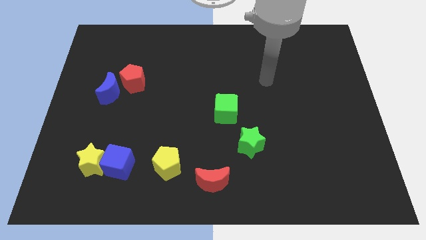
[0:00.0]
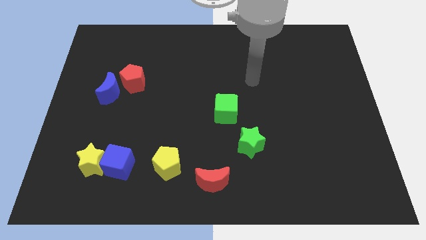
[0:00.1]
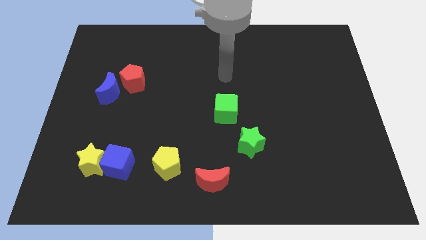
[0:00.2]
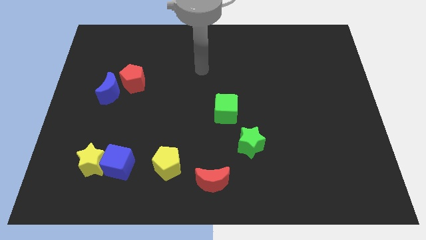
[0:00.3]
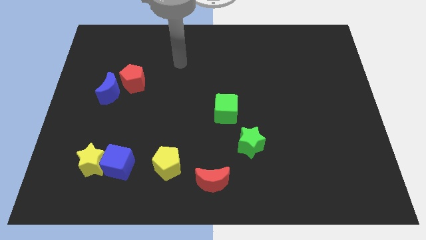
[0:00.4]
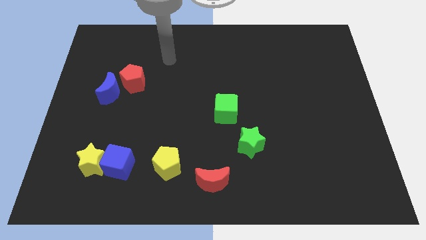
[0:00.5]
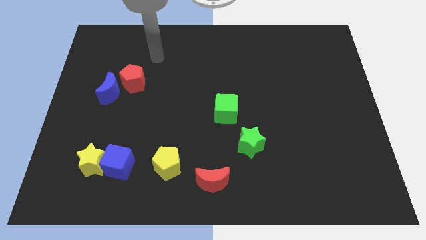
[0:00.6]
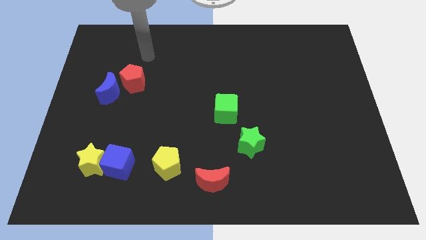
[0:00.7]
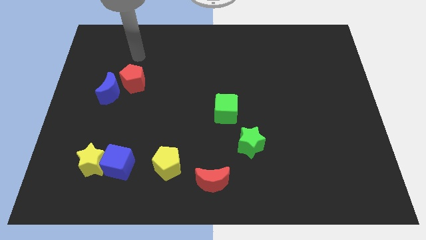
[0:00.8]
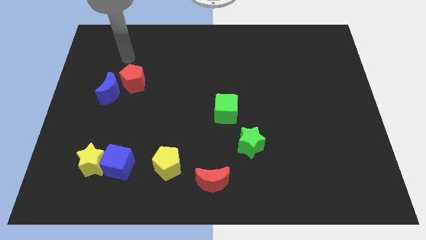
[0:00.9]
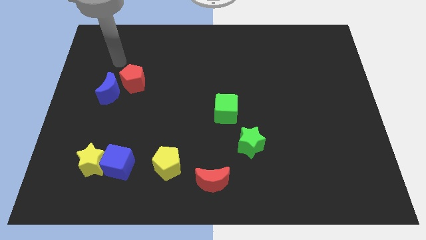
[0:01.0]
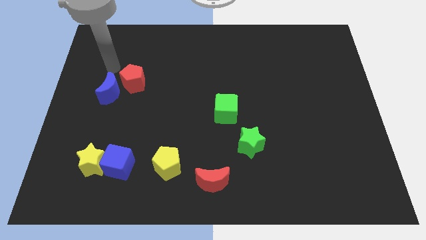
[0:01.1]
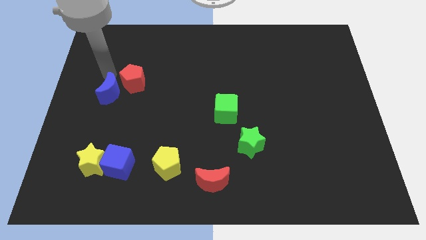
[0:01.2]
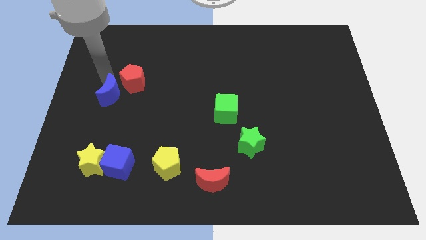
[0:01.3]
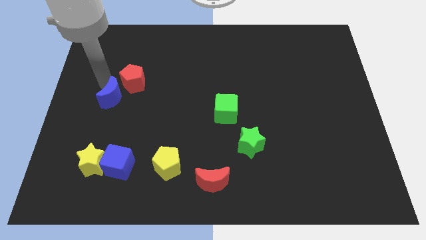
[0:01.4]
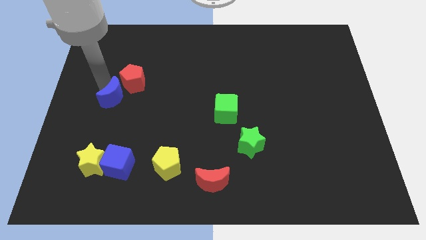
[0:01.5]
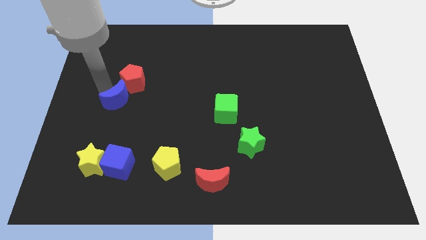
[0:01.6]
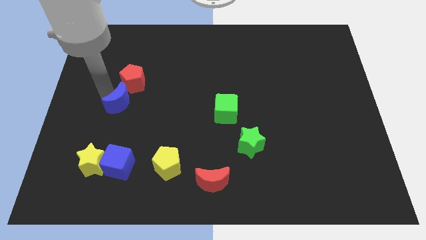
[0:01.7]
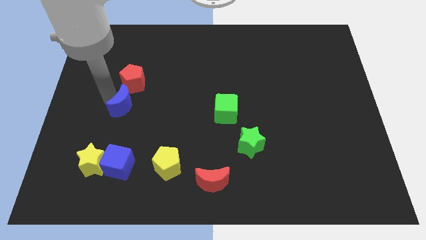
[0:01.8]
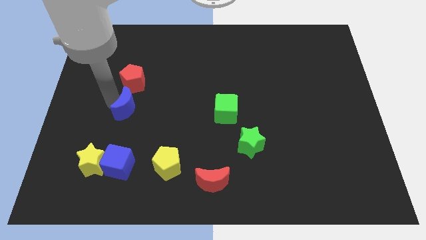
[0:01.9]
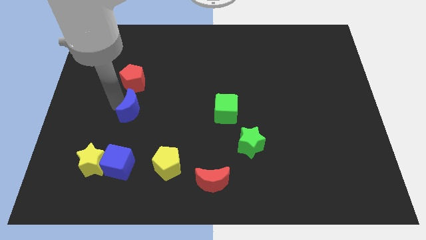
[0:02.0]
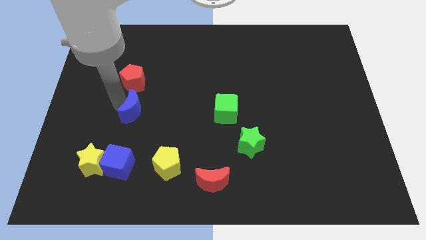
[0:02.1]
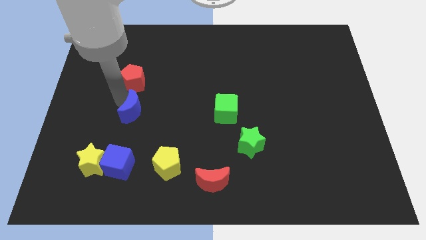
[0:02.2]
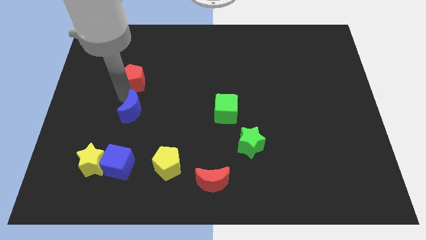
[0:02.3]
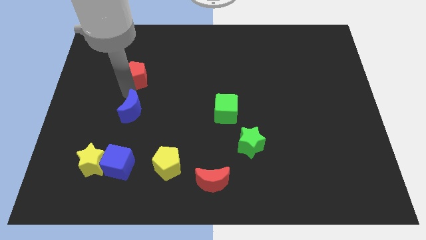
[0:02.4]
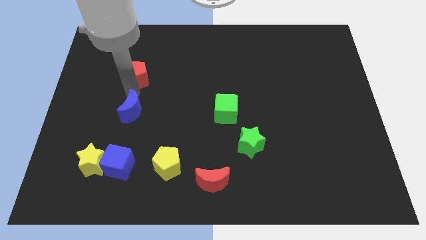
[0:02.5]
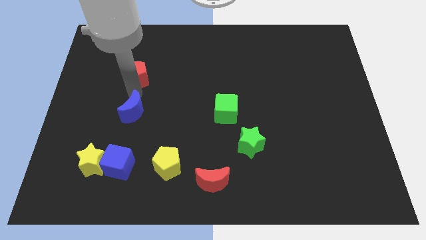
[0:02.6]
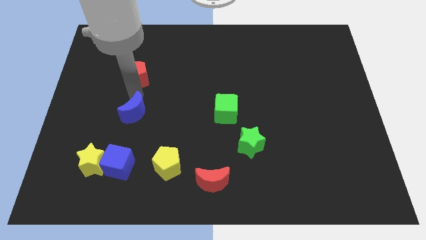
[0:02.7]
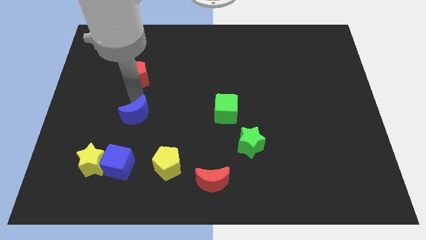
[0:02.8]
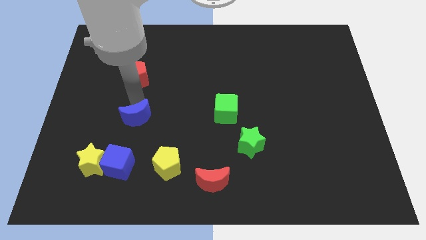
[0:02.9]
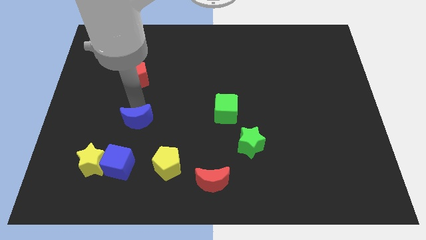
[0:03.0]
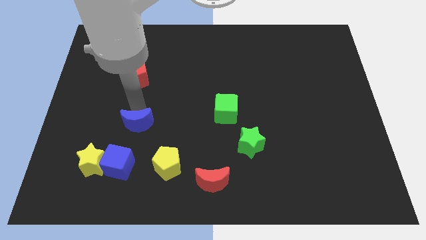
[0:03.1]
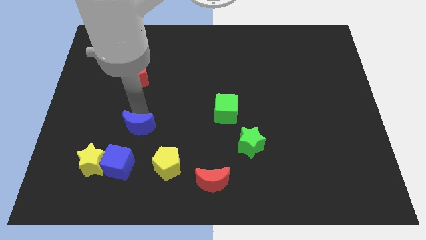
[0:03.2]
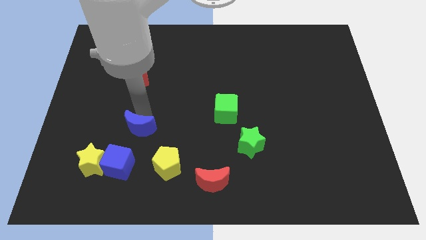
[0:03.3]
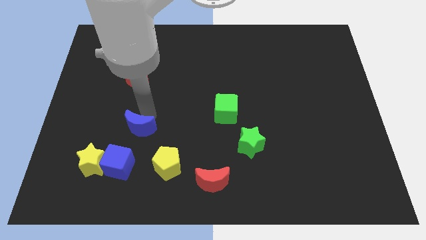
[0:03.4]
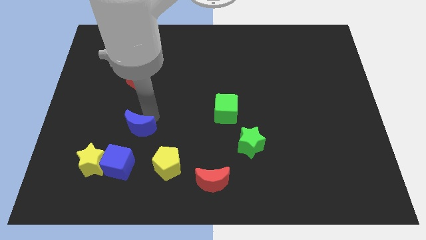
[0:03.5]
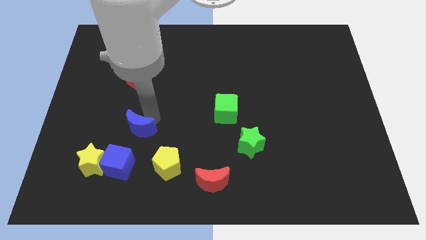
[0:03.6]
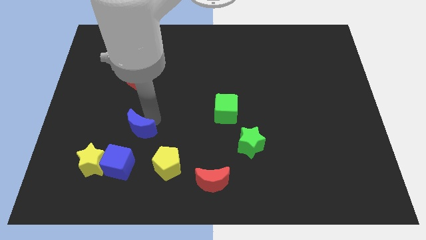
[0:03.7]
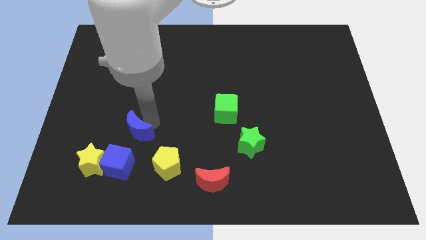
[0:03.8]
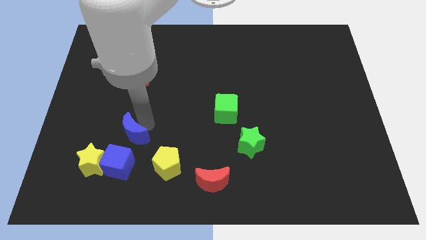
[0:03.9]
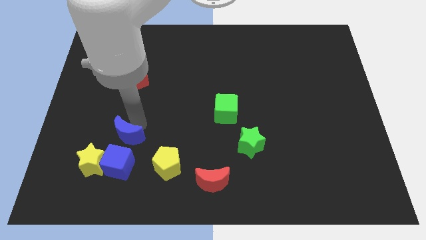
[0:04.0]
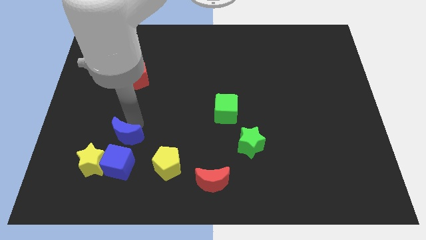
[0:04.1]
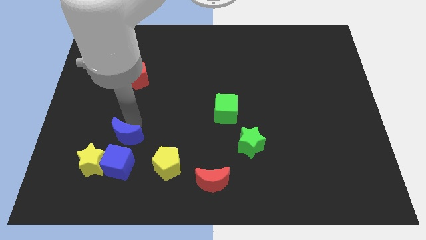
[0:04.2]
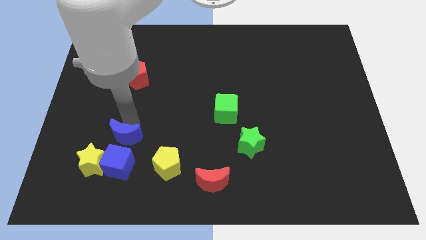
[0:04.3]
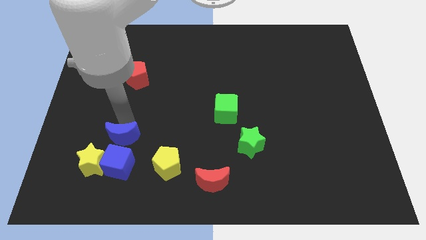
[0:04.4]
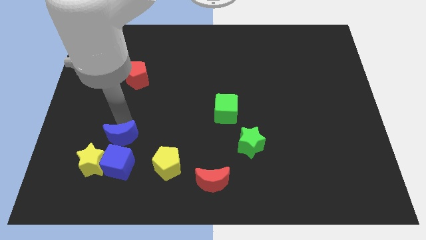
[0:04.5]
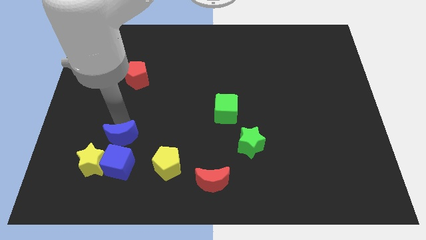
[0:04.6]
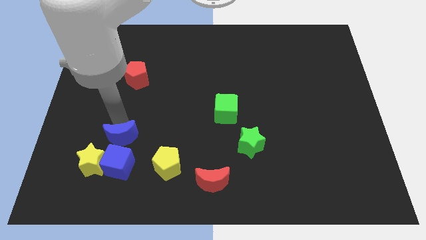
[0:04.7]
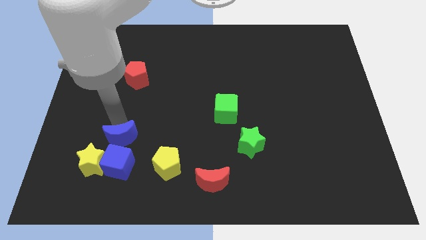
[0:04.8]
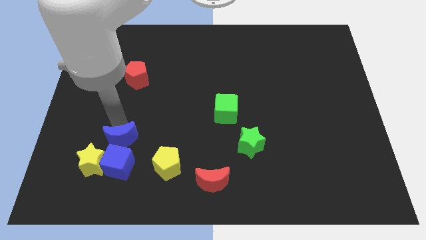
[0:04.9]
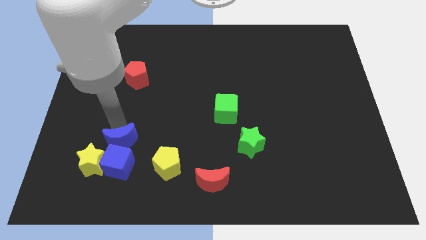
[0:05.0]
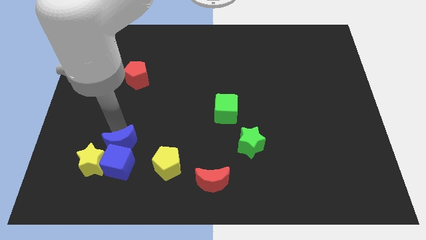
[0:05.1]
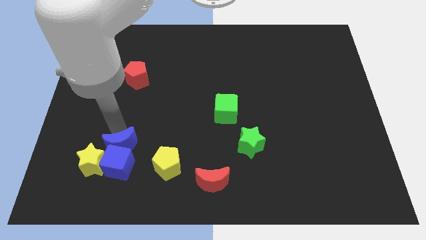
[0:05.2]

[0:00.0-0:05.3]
slide the blue moon close to the blue cube

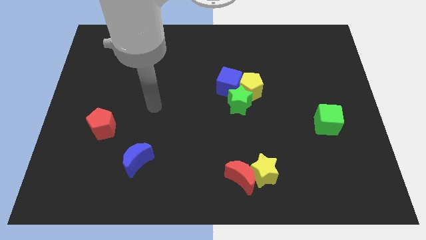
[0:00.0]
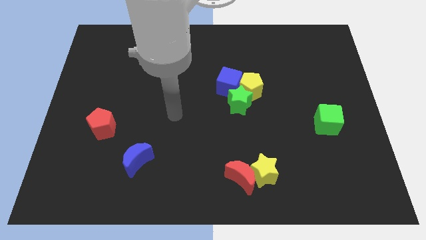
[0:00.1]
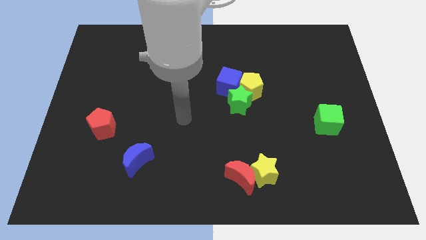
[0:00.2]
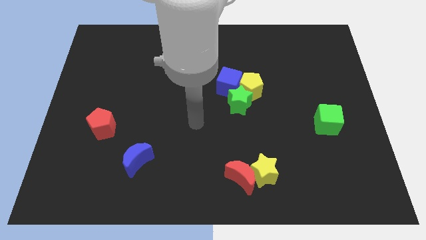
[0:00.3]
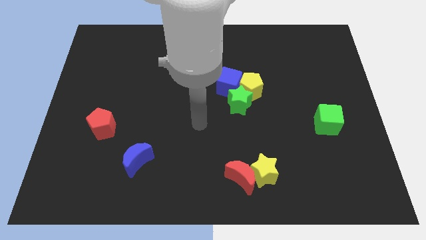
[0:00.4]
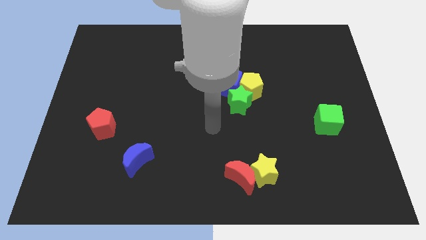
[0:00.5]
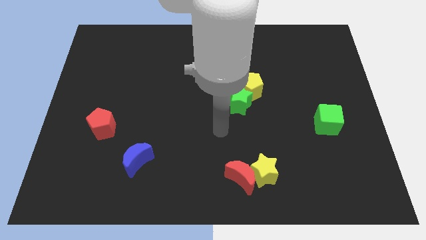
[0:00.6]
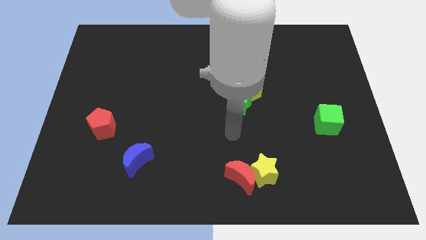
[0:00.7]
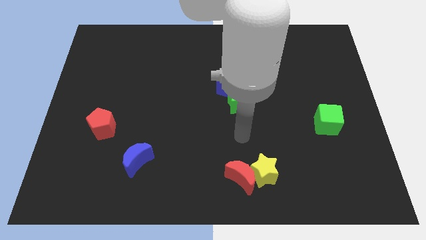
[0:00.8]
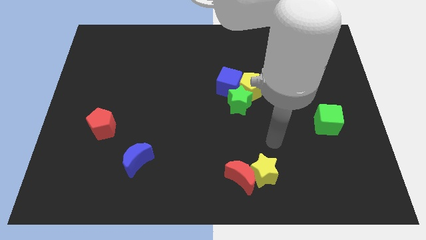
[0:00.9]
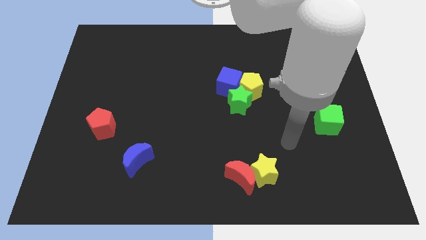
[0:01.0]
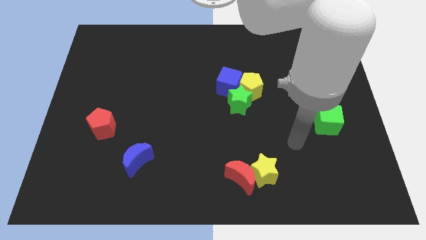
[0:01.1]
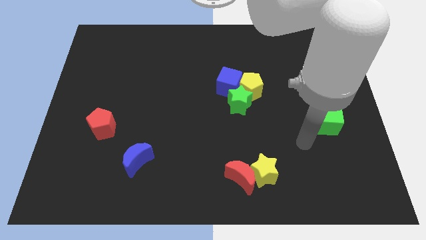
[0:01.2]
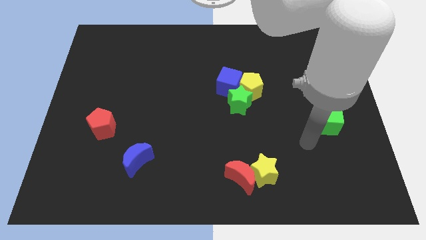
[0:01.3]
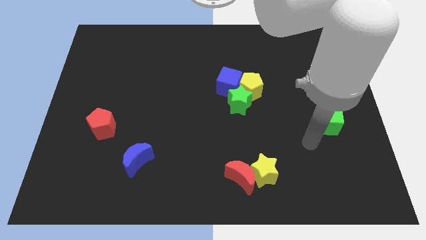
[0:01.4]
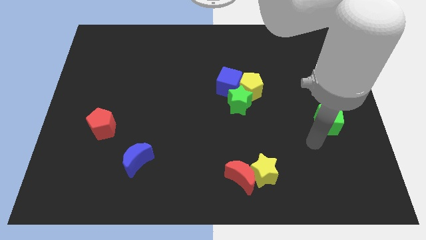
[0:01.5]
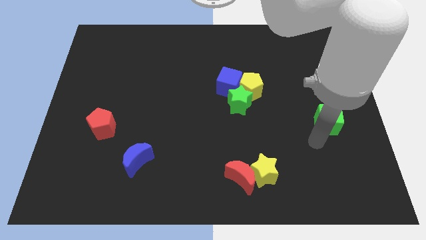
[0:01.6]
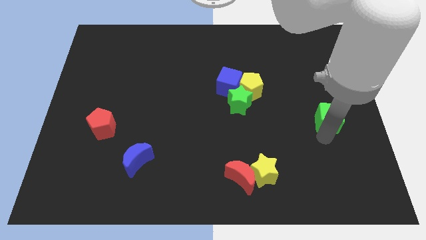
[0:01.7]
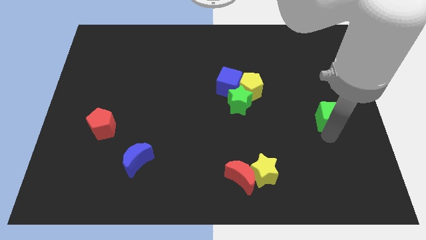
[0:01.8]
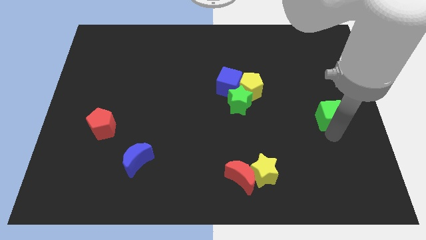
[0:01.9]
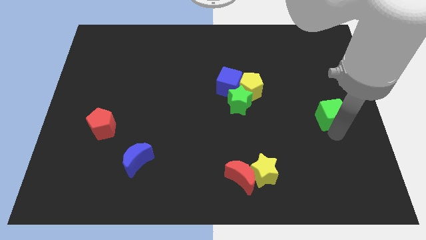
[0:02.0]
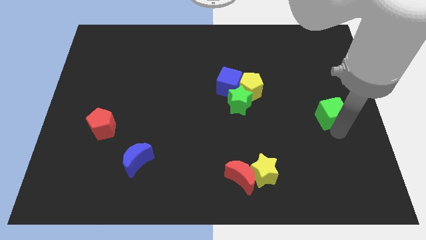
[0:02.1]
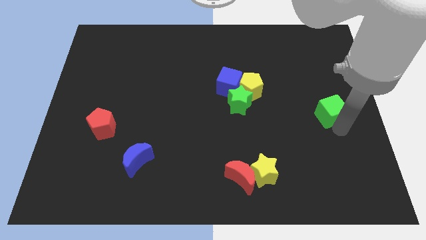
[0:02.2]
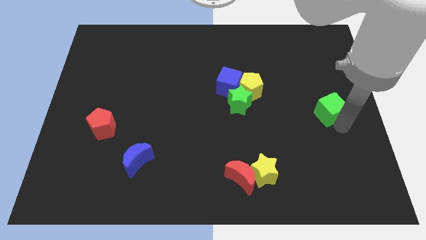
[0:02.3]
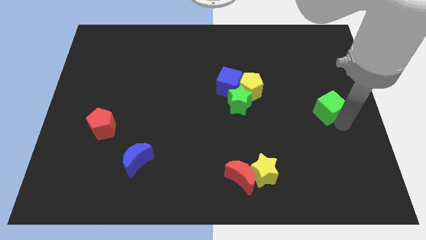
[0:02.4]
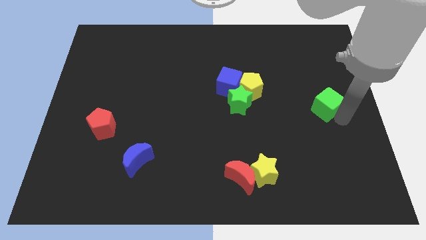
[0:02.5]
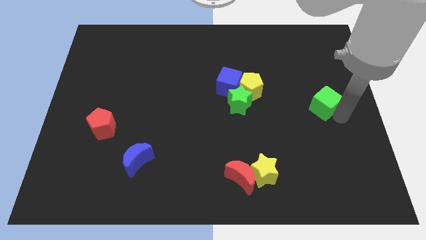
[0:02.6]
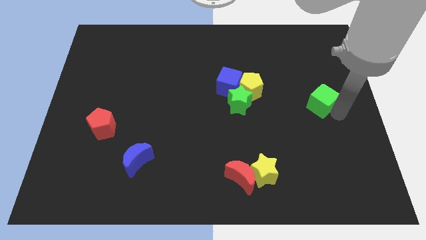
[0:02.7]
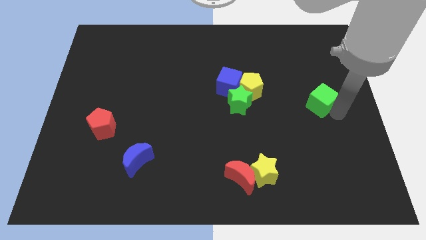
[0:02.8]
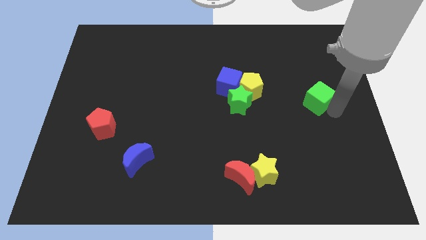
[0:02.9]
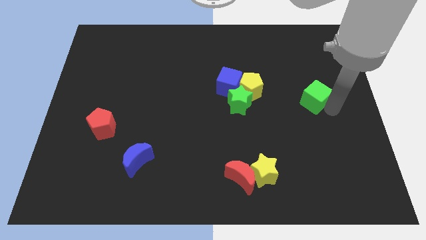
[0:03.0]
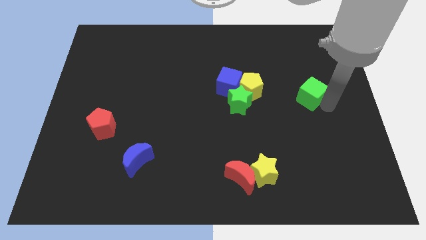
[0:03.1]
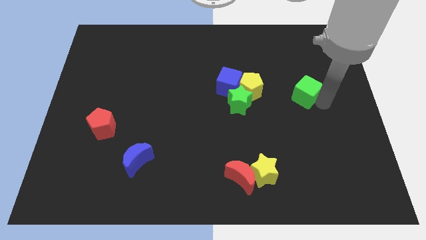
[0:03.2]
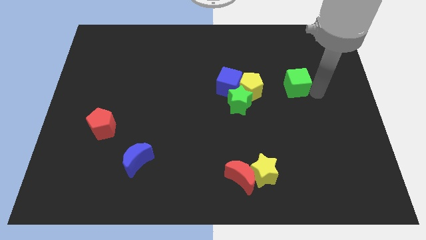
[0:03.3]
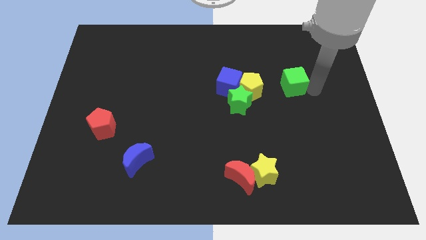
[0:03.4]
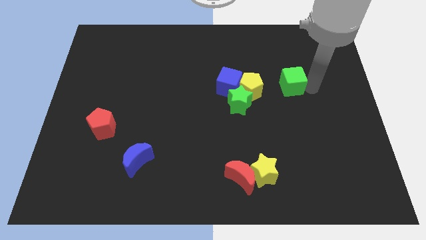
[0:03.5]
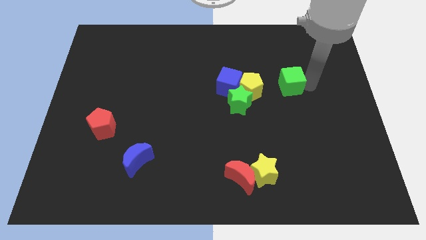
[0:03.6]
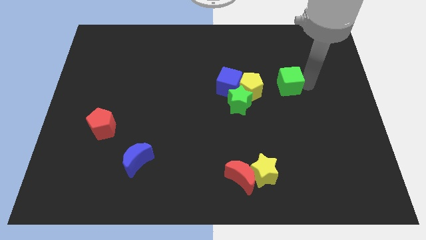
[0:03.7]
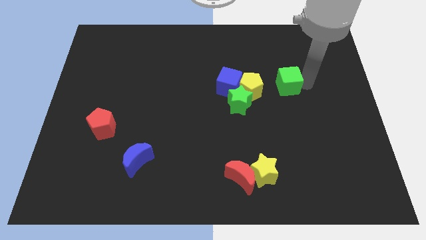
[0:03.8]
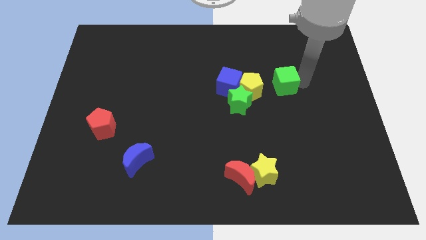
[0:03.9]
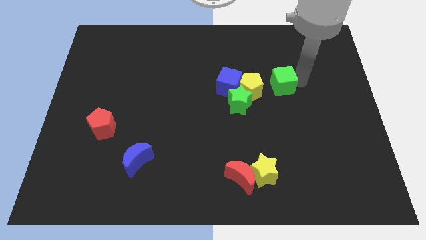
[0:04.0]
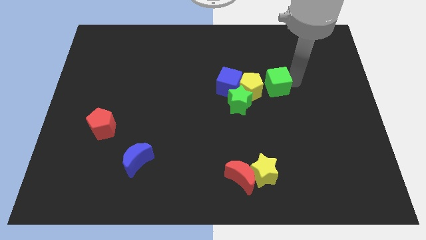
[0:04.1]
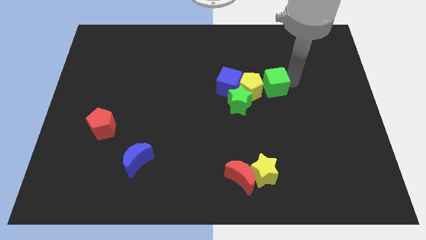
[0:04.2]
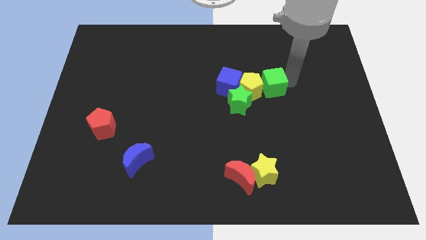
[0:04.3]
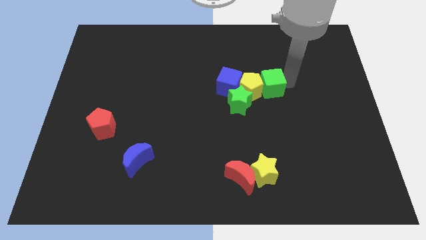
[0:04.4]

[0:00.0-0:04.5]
push the green cube close to the yellow pentagon
